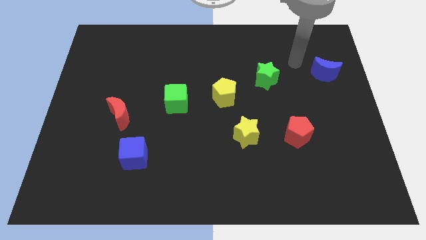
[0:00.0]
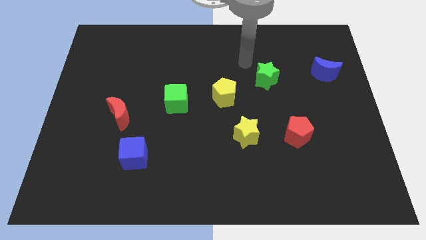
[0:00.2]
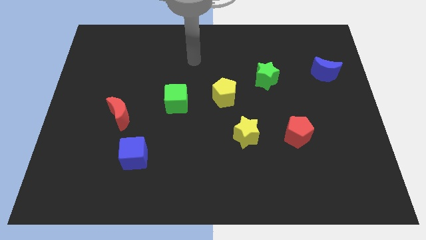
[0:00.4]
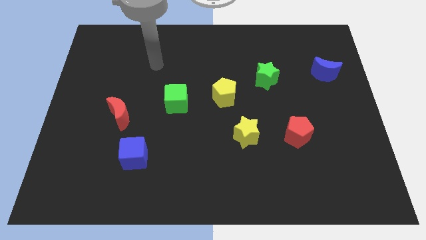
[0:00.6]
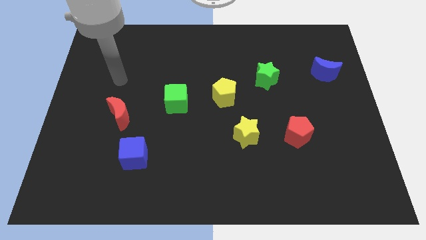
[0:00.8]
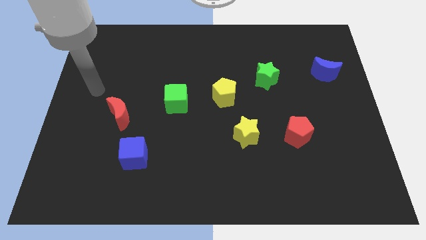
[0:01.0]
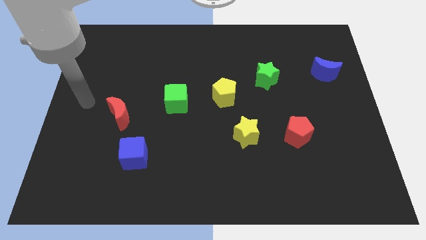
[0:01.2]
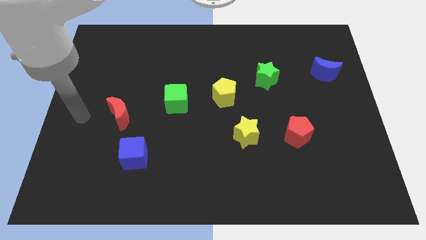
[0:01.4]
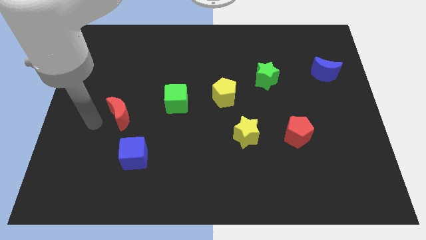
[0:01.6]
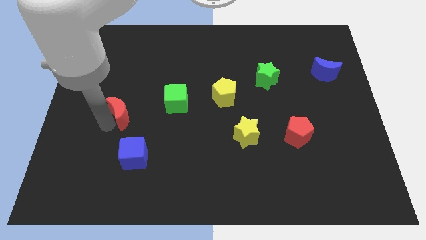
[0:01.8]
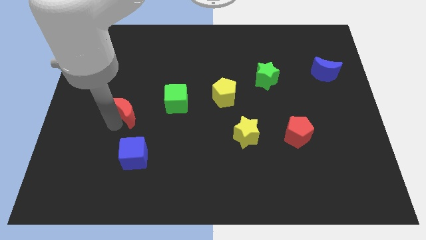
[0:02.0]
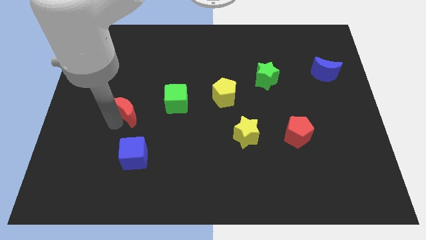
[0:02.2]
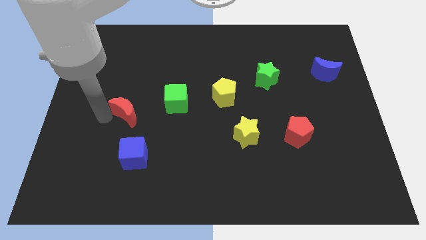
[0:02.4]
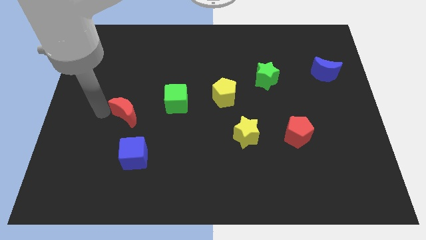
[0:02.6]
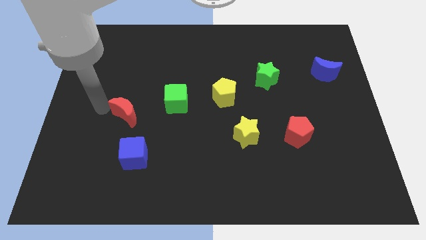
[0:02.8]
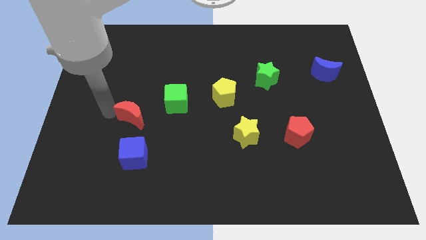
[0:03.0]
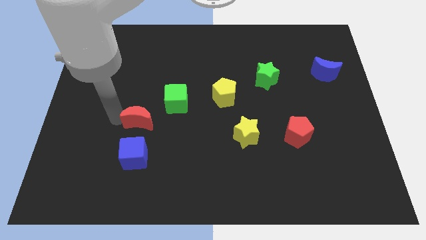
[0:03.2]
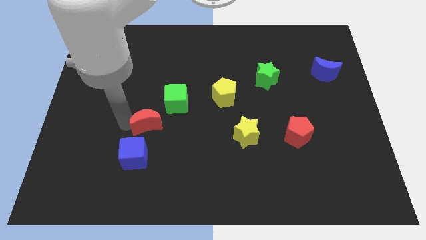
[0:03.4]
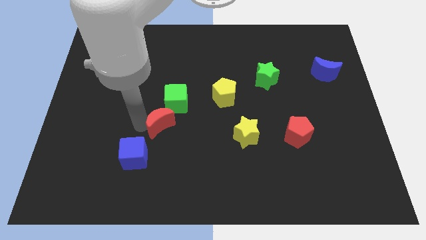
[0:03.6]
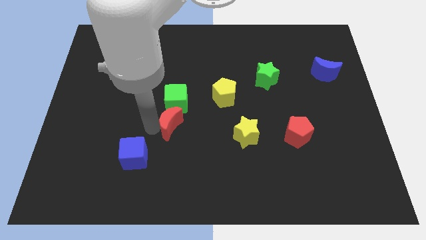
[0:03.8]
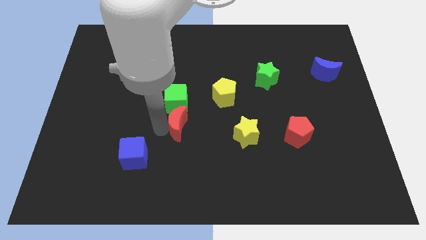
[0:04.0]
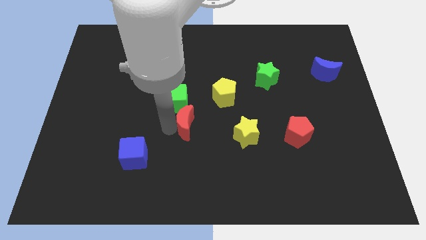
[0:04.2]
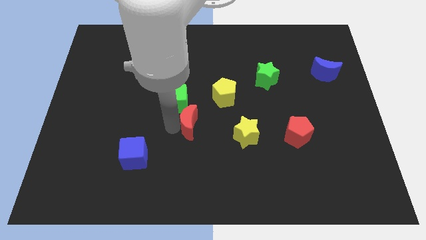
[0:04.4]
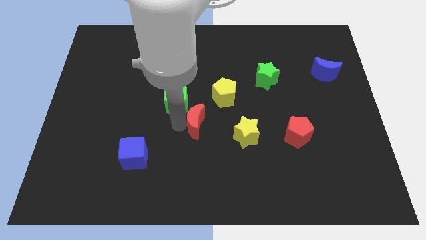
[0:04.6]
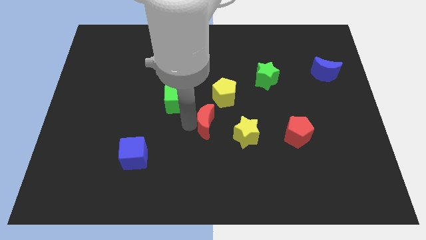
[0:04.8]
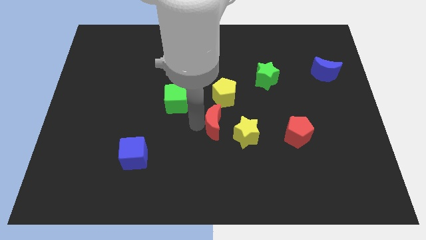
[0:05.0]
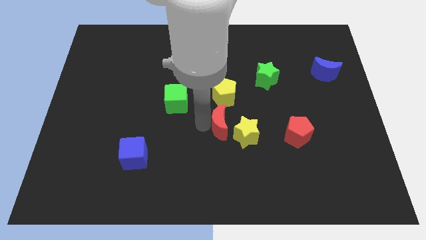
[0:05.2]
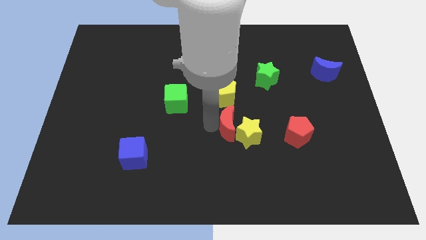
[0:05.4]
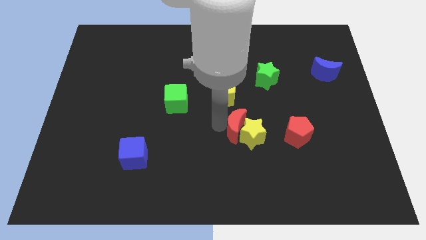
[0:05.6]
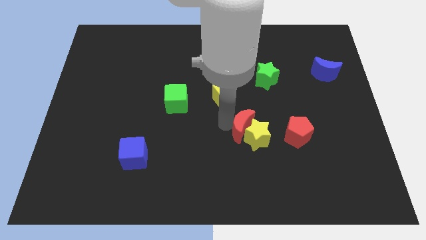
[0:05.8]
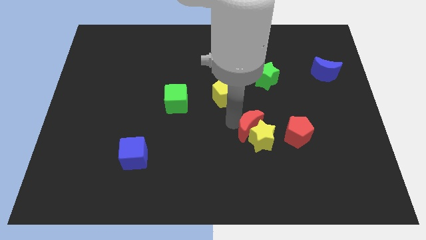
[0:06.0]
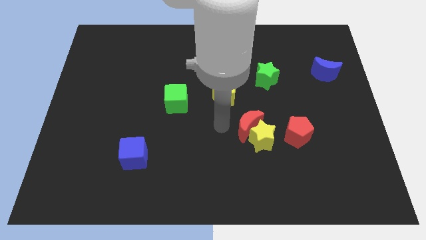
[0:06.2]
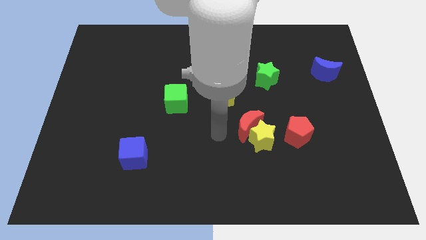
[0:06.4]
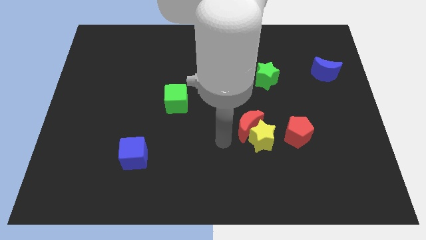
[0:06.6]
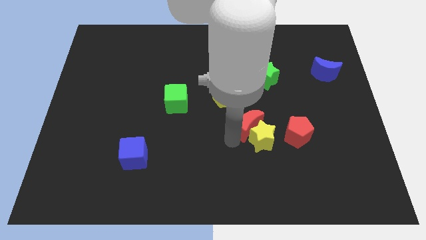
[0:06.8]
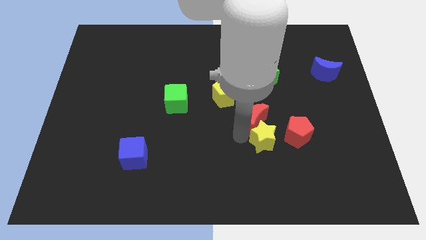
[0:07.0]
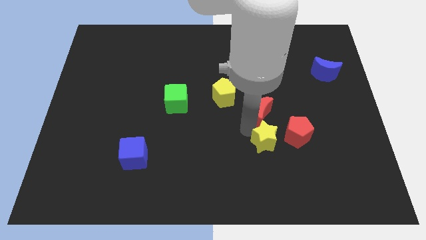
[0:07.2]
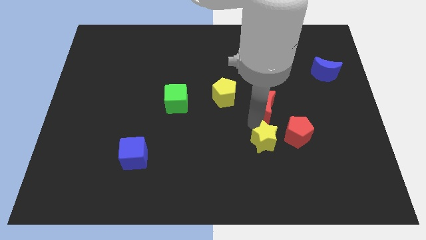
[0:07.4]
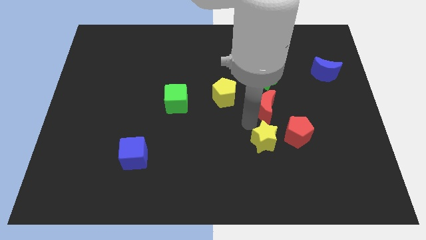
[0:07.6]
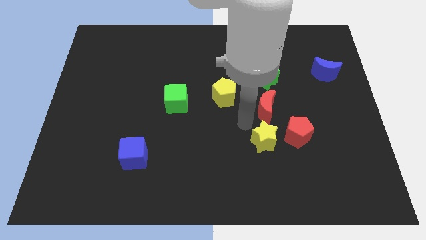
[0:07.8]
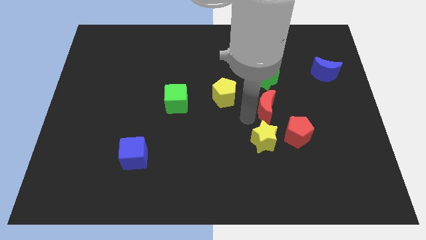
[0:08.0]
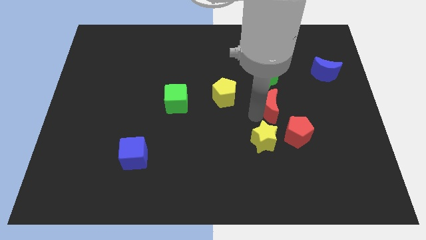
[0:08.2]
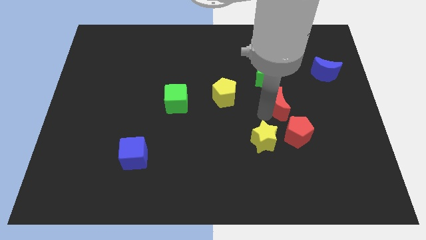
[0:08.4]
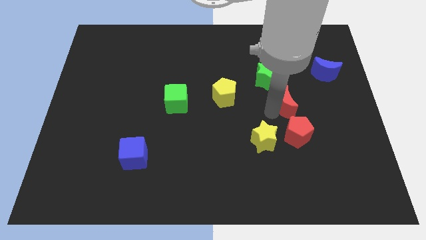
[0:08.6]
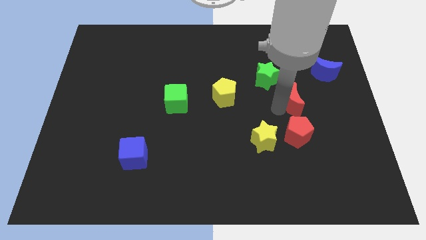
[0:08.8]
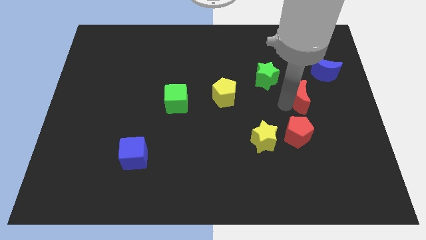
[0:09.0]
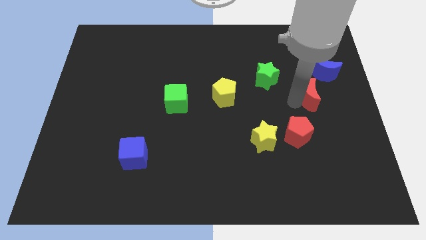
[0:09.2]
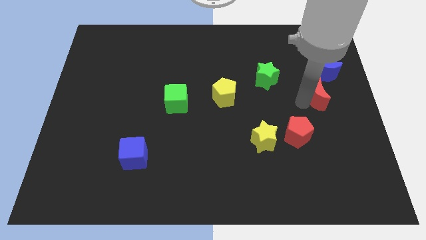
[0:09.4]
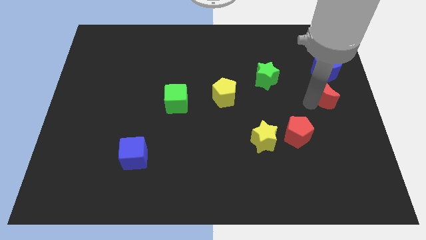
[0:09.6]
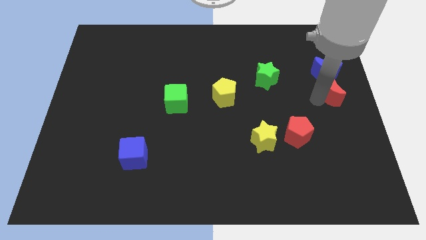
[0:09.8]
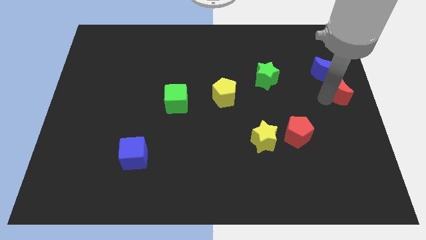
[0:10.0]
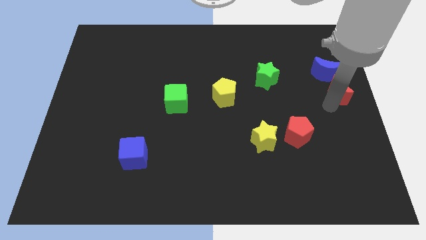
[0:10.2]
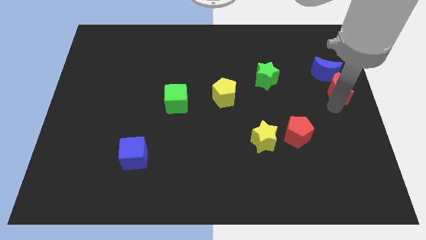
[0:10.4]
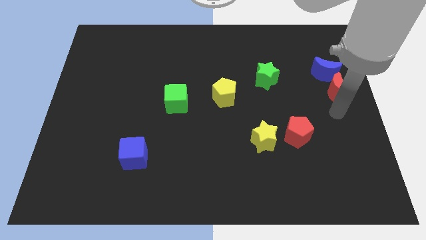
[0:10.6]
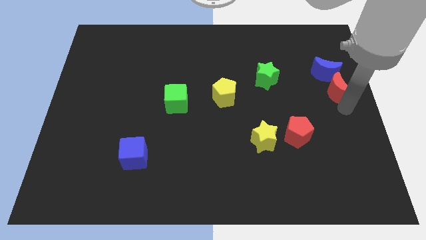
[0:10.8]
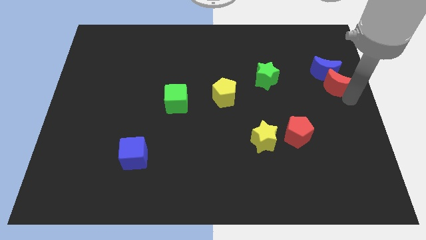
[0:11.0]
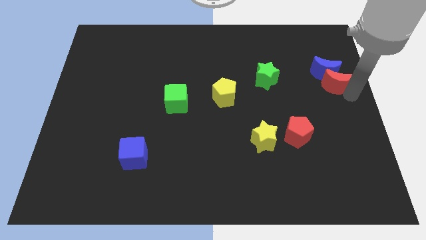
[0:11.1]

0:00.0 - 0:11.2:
move the red moon towards the blue moon

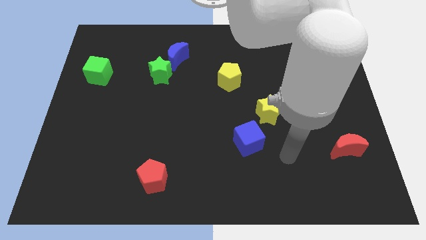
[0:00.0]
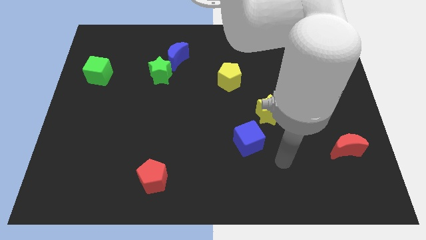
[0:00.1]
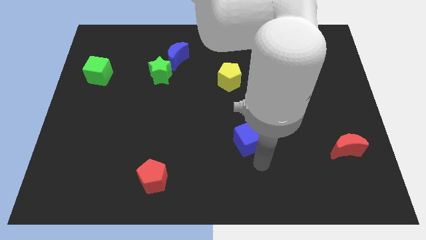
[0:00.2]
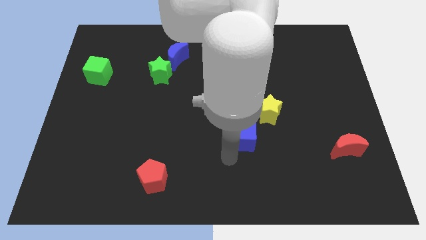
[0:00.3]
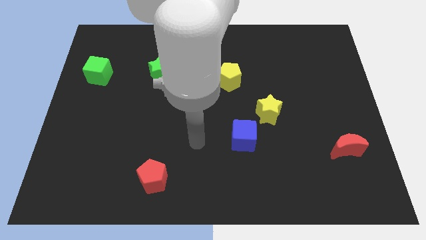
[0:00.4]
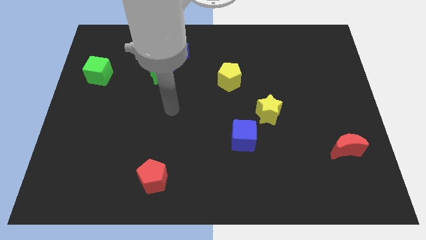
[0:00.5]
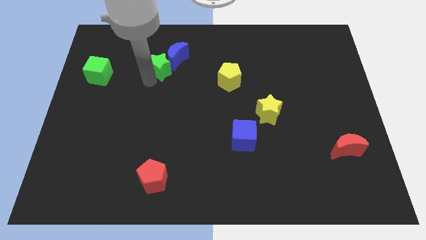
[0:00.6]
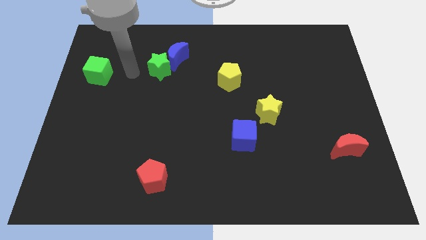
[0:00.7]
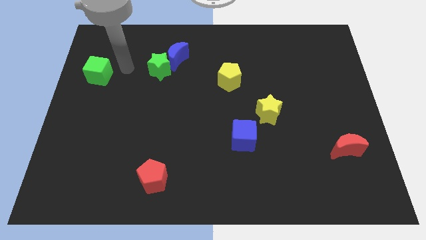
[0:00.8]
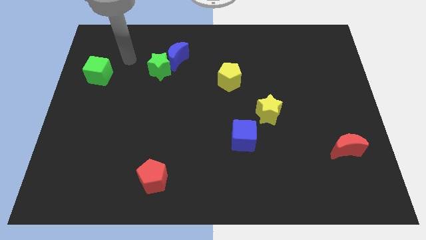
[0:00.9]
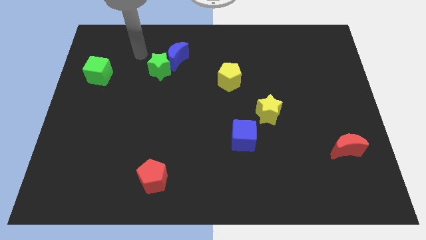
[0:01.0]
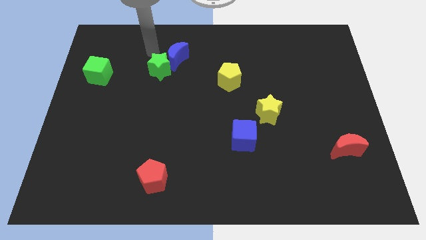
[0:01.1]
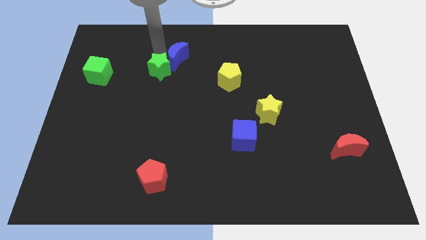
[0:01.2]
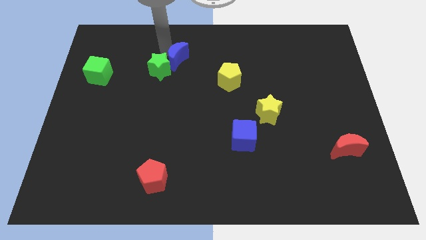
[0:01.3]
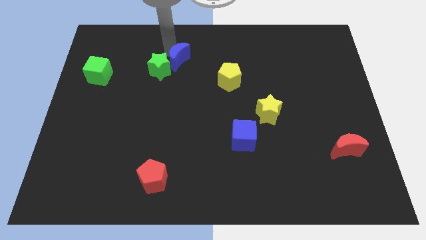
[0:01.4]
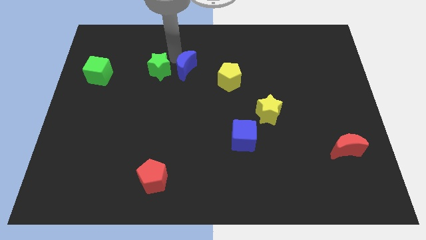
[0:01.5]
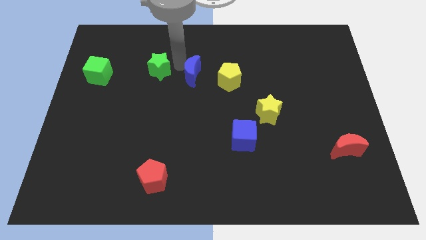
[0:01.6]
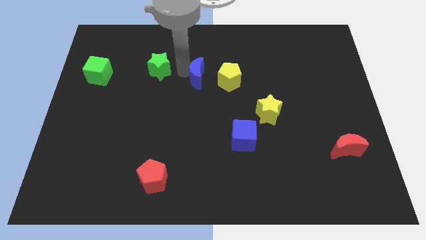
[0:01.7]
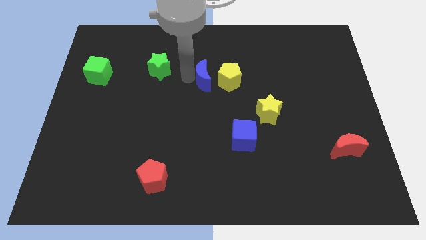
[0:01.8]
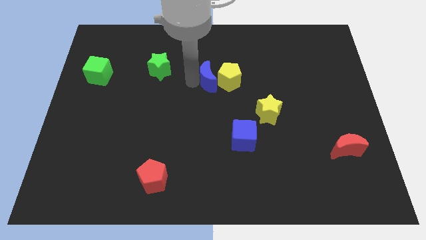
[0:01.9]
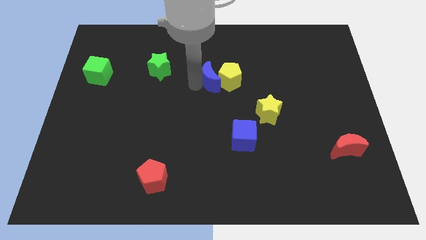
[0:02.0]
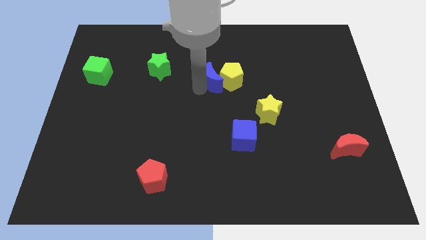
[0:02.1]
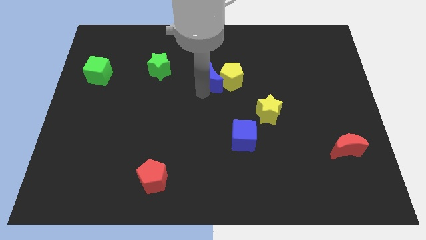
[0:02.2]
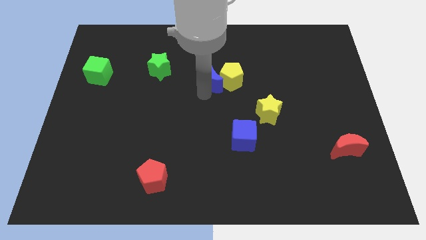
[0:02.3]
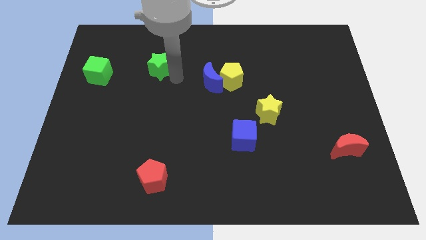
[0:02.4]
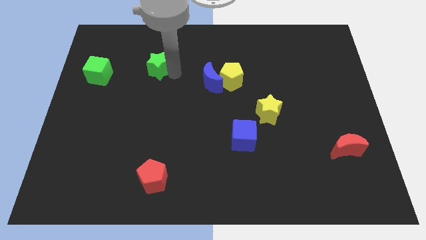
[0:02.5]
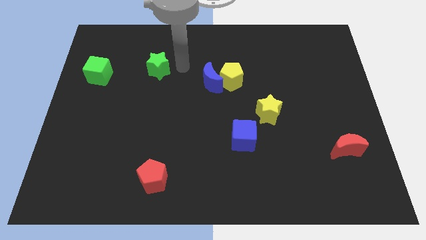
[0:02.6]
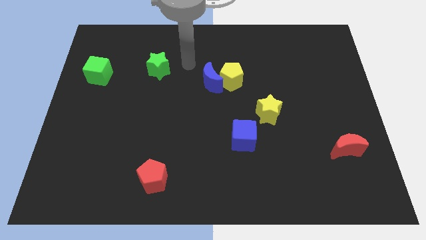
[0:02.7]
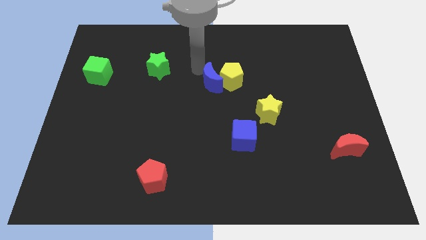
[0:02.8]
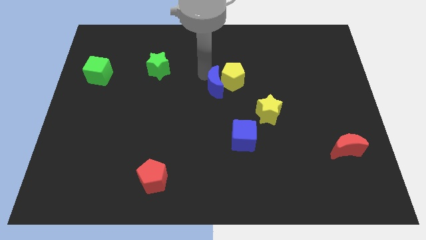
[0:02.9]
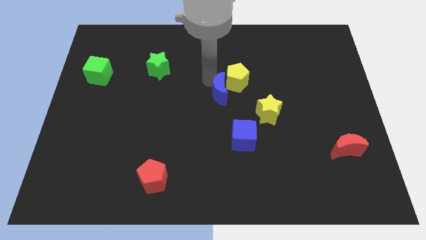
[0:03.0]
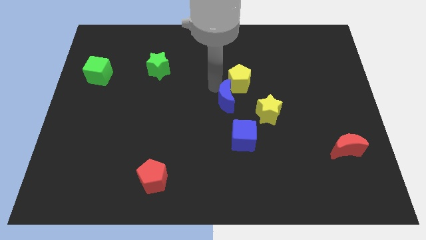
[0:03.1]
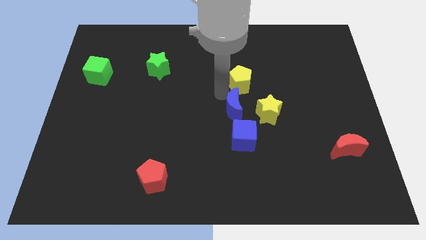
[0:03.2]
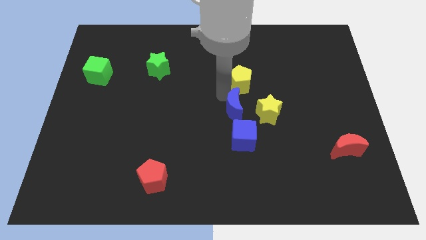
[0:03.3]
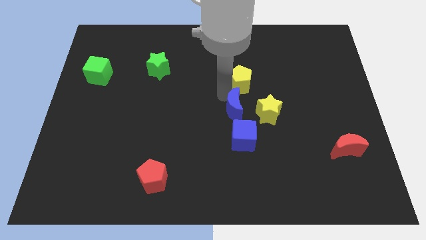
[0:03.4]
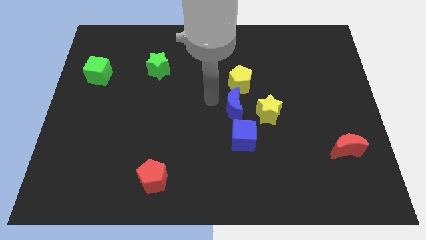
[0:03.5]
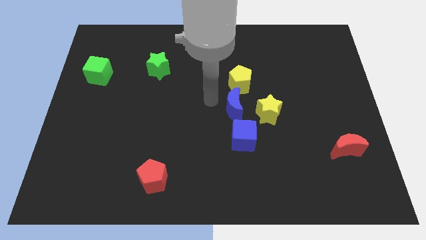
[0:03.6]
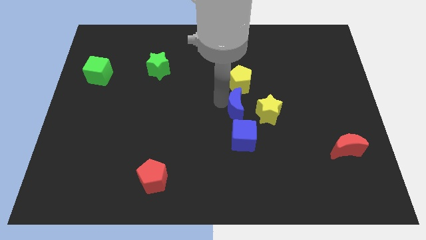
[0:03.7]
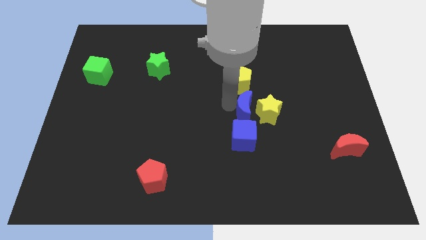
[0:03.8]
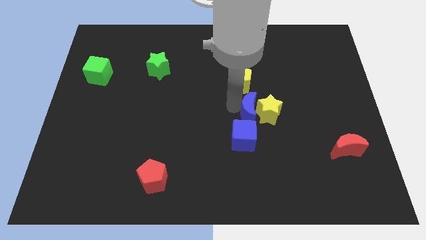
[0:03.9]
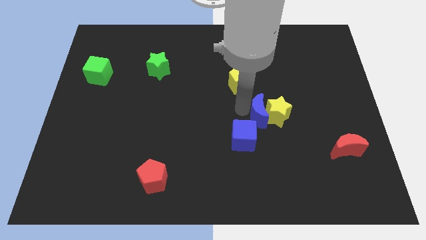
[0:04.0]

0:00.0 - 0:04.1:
put the blue moon to the yellow star
